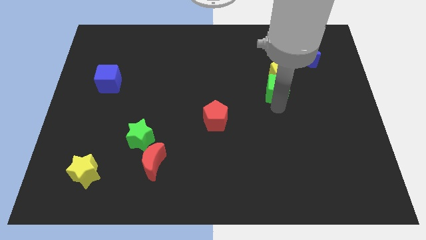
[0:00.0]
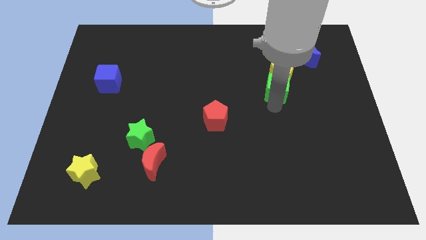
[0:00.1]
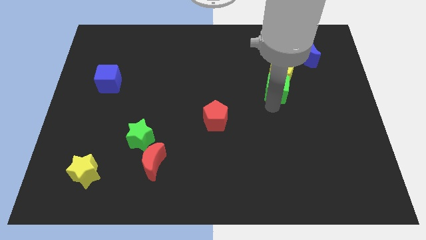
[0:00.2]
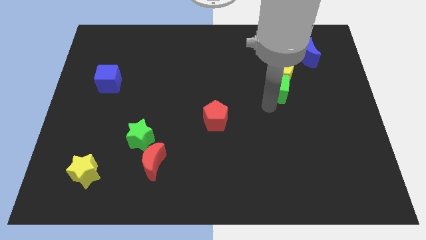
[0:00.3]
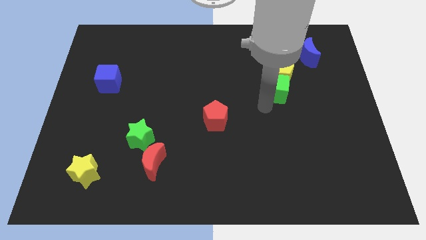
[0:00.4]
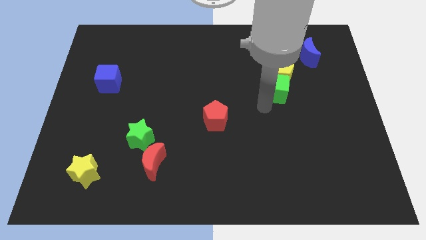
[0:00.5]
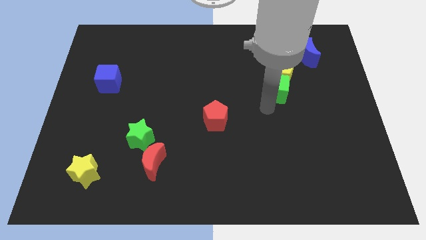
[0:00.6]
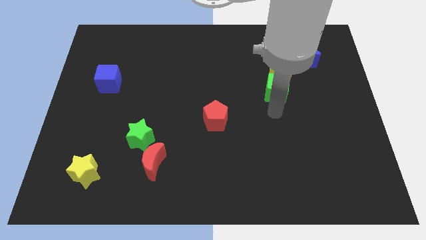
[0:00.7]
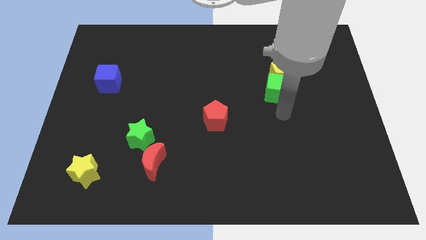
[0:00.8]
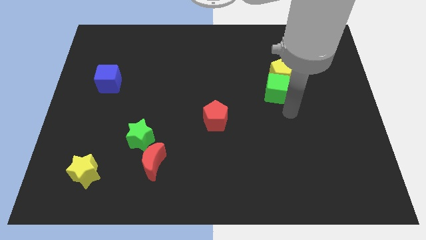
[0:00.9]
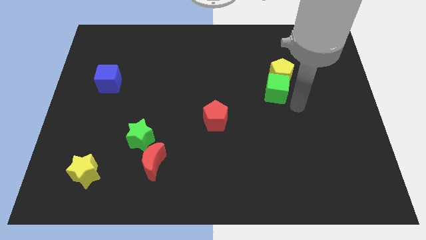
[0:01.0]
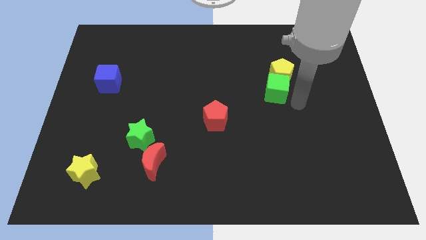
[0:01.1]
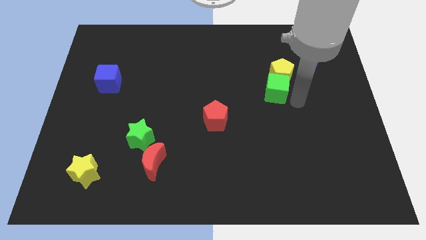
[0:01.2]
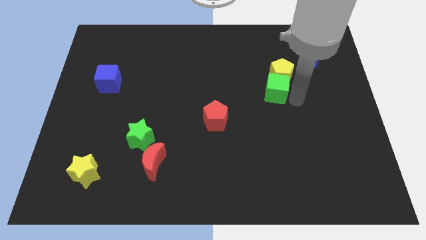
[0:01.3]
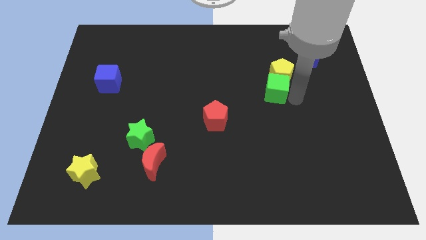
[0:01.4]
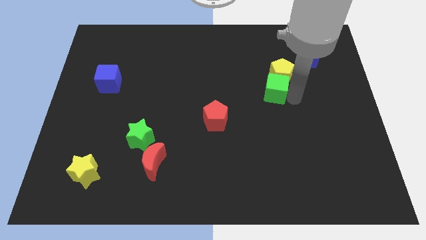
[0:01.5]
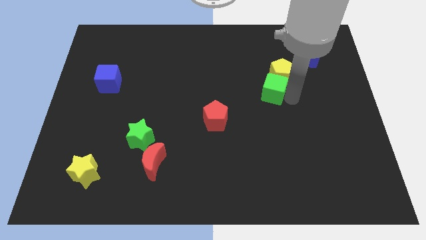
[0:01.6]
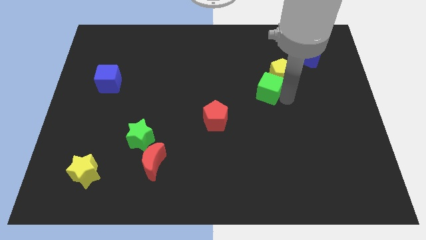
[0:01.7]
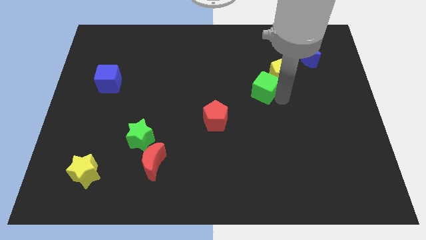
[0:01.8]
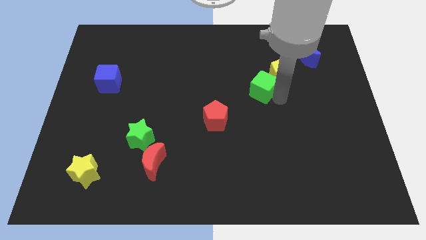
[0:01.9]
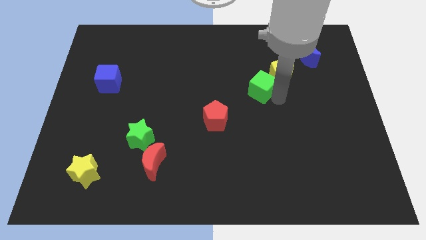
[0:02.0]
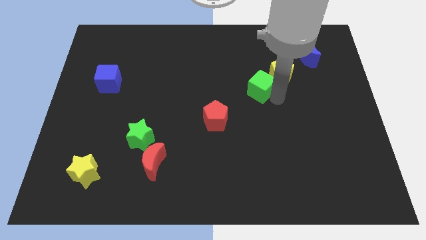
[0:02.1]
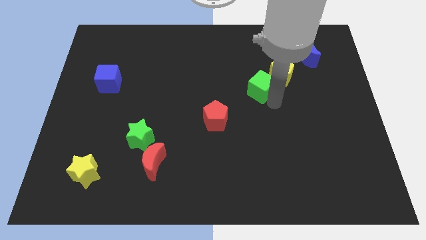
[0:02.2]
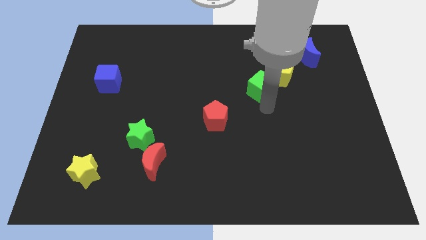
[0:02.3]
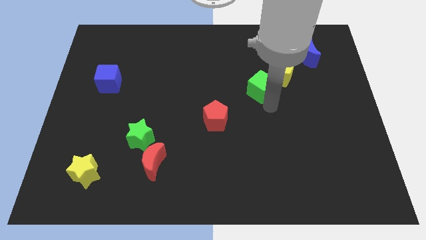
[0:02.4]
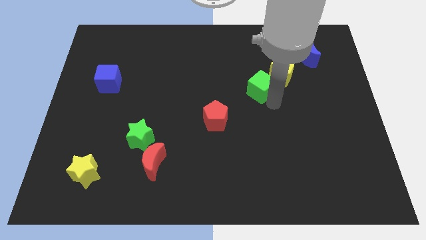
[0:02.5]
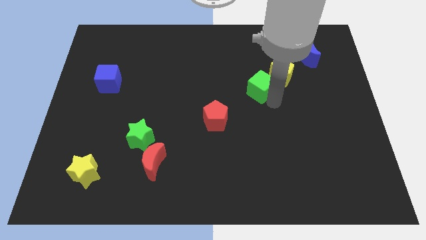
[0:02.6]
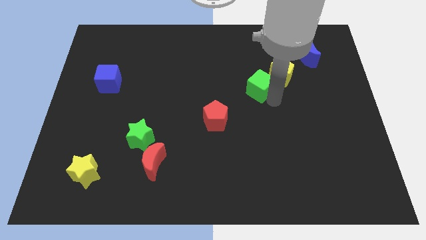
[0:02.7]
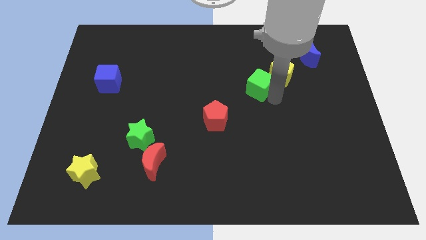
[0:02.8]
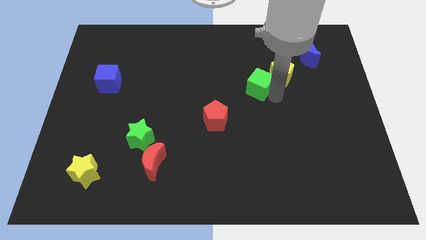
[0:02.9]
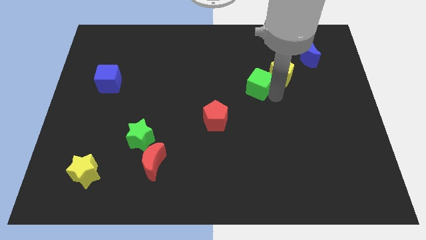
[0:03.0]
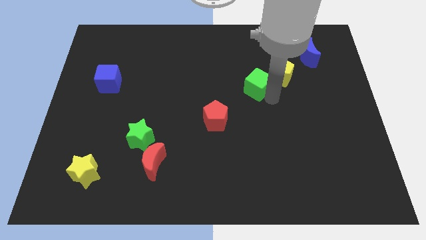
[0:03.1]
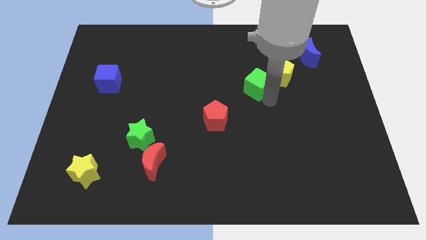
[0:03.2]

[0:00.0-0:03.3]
push the green cube to the left

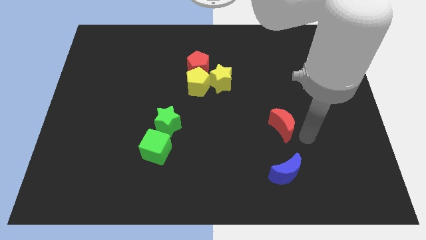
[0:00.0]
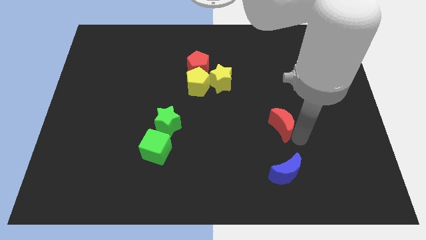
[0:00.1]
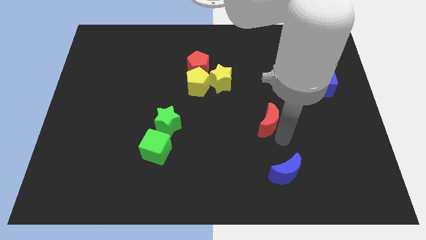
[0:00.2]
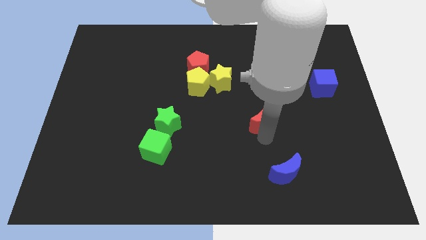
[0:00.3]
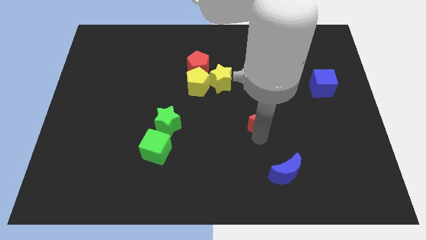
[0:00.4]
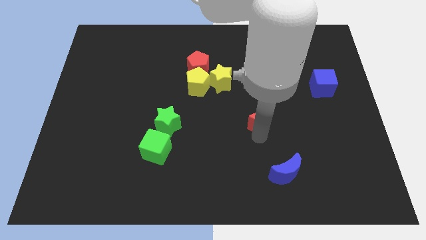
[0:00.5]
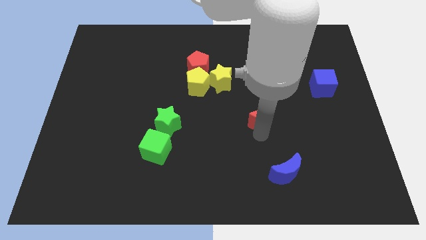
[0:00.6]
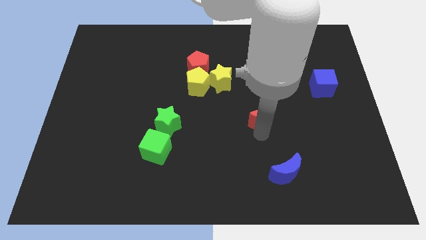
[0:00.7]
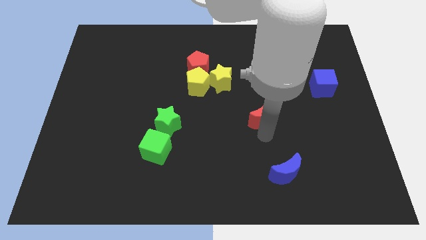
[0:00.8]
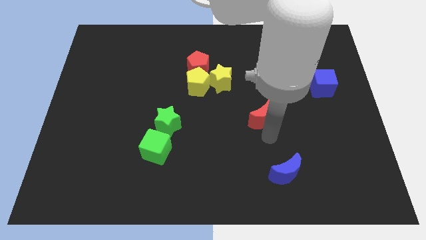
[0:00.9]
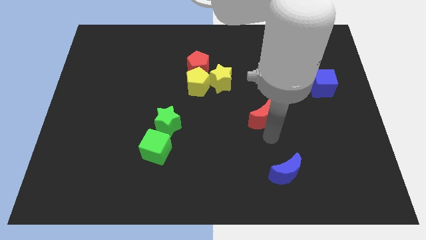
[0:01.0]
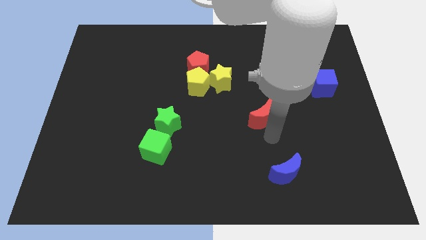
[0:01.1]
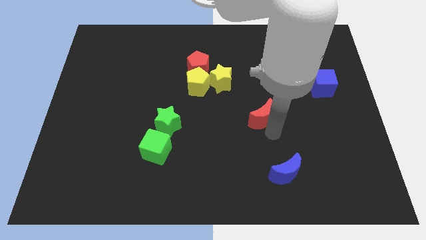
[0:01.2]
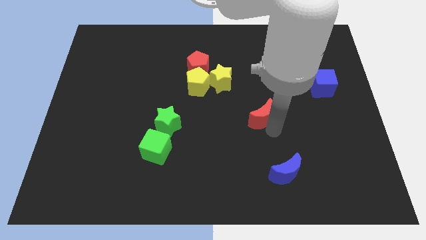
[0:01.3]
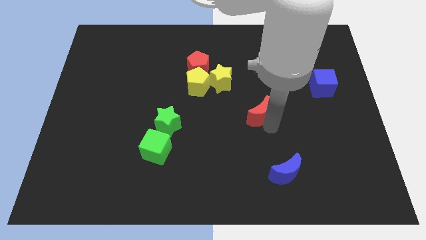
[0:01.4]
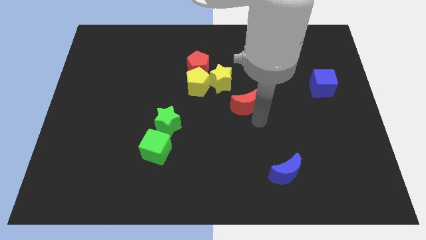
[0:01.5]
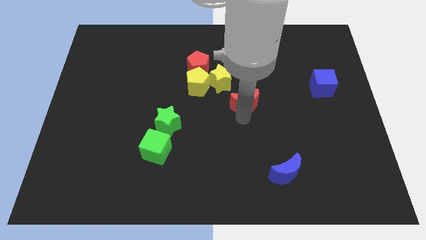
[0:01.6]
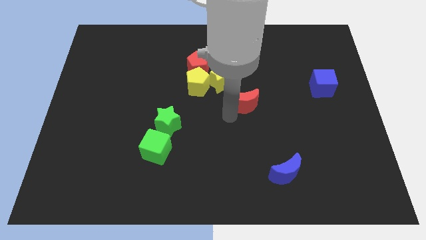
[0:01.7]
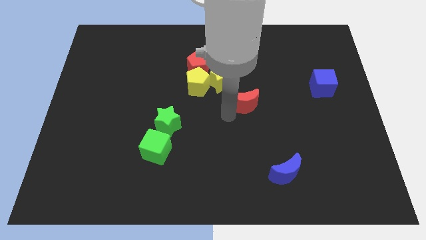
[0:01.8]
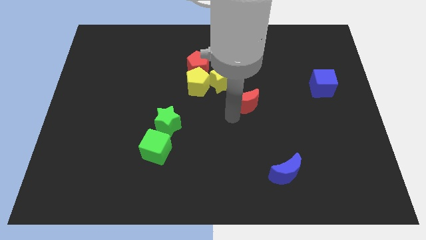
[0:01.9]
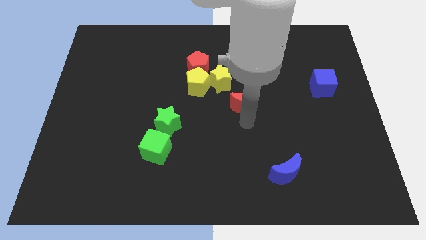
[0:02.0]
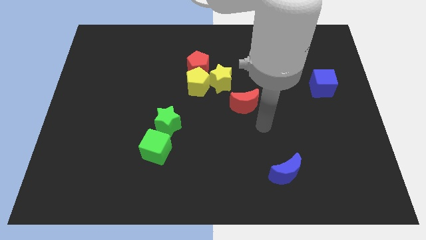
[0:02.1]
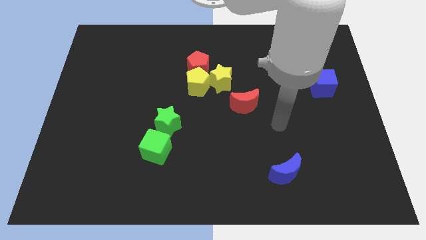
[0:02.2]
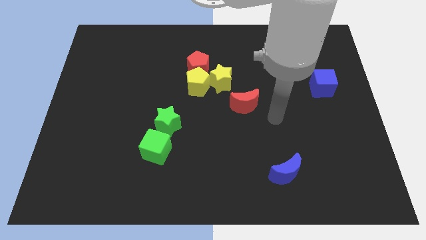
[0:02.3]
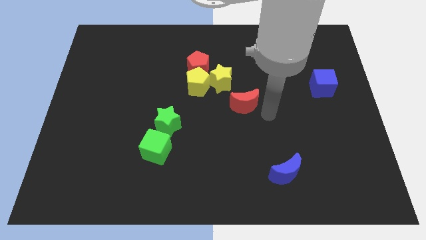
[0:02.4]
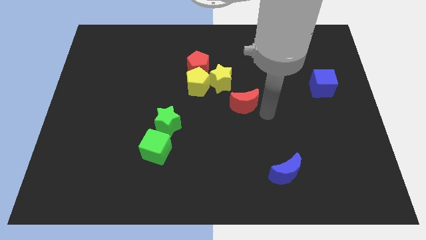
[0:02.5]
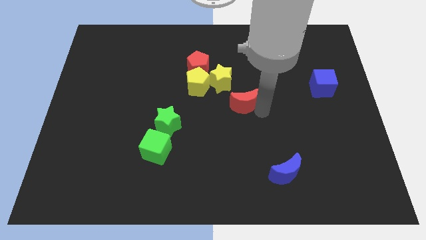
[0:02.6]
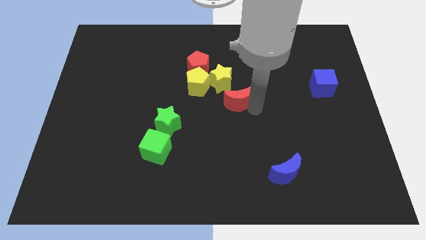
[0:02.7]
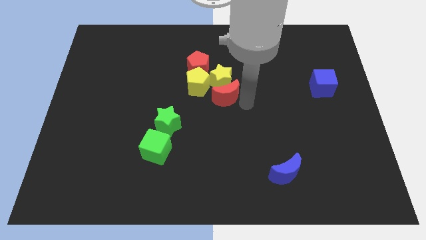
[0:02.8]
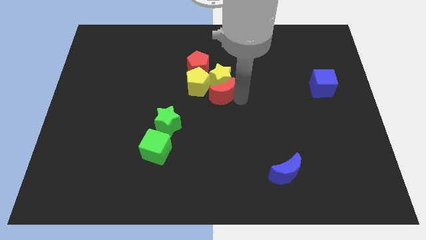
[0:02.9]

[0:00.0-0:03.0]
move the red moon down to the yellow star

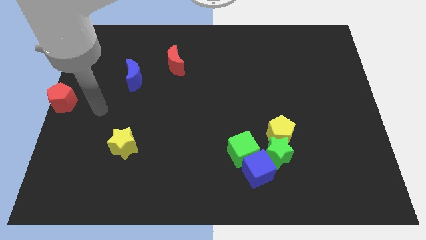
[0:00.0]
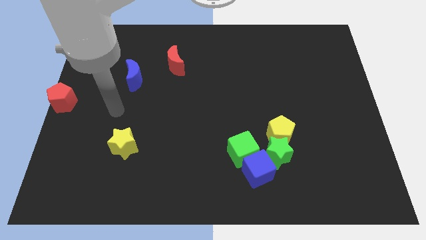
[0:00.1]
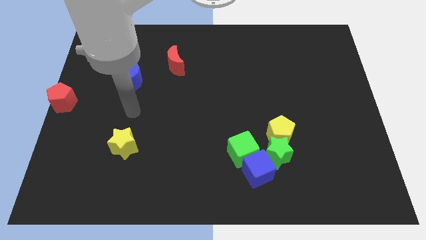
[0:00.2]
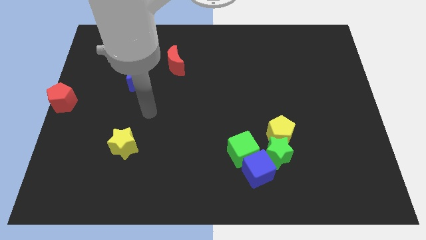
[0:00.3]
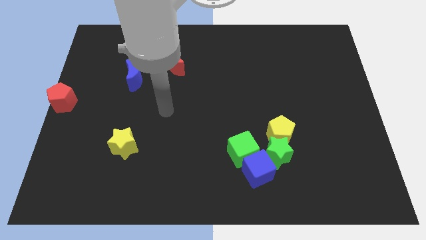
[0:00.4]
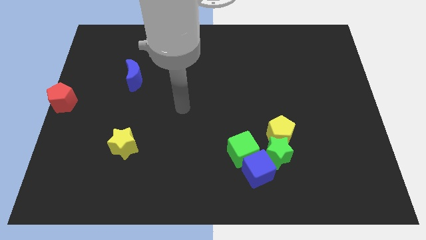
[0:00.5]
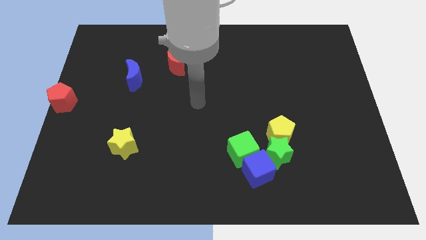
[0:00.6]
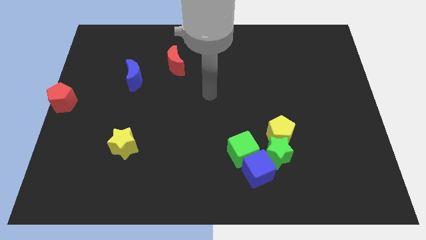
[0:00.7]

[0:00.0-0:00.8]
place your hand at center of the board

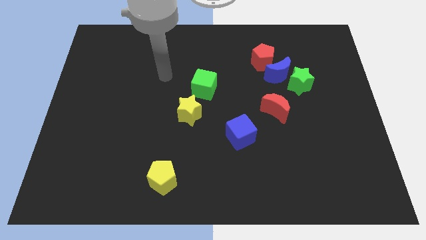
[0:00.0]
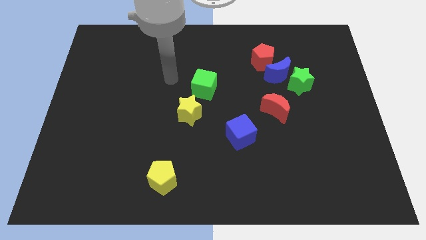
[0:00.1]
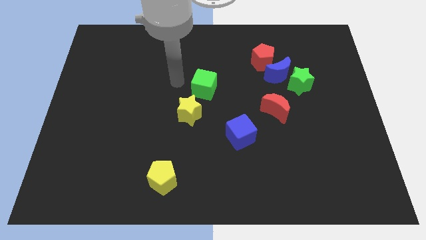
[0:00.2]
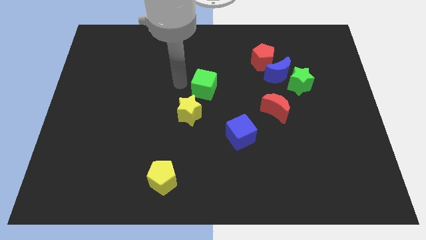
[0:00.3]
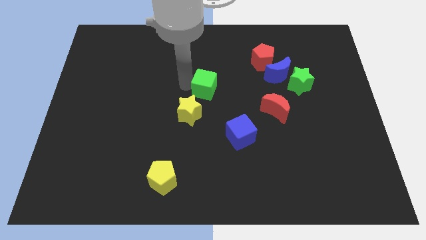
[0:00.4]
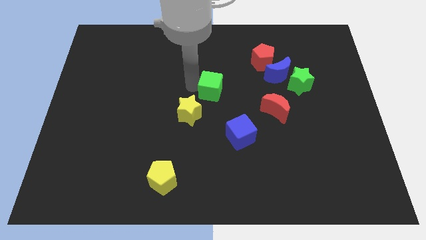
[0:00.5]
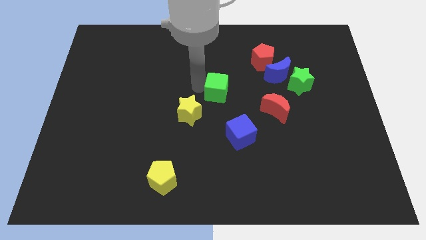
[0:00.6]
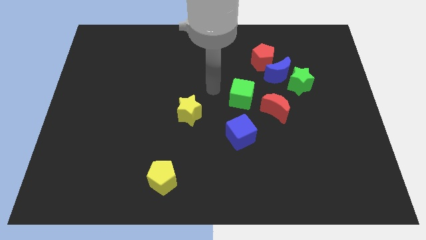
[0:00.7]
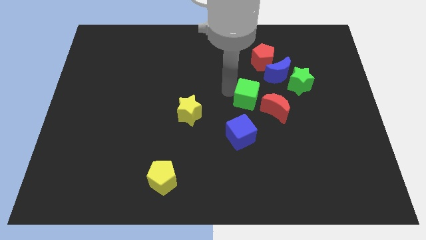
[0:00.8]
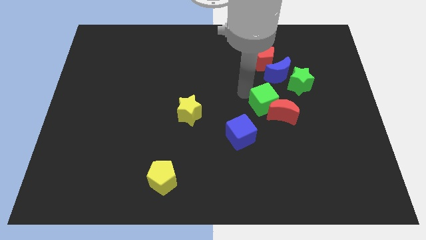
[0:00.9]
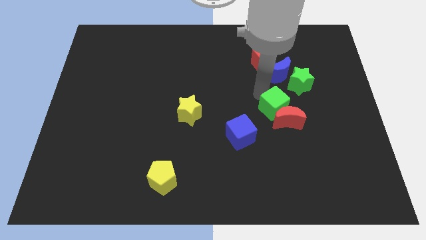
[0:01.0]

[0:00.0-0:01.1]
slide green cube into red moon

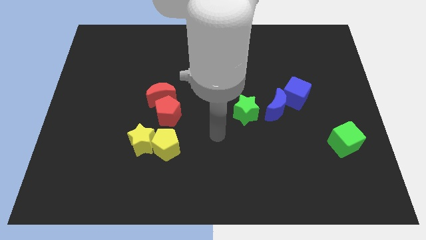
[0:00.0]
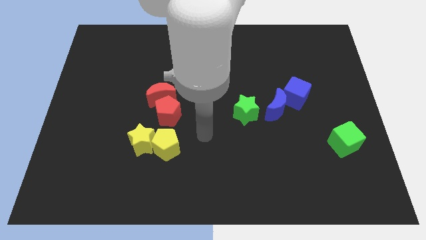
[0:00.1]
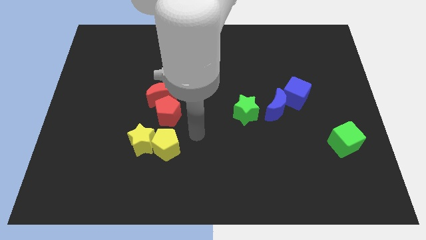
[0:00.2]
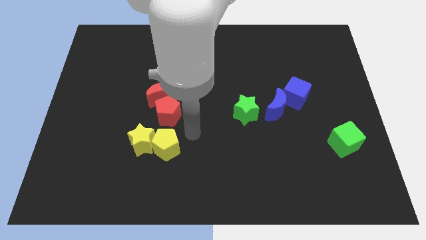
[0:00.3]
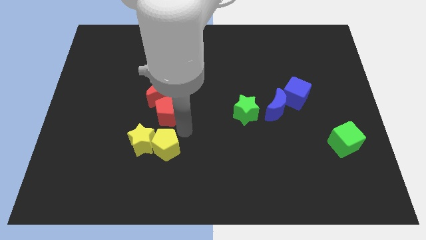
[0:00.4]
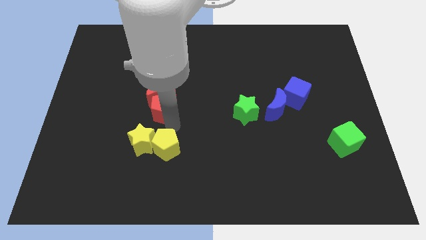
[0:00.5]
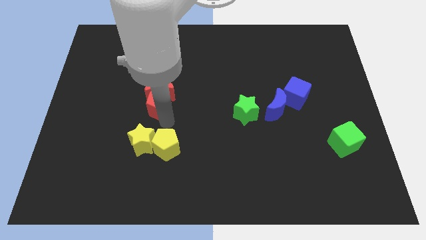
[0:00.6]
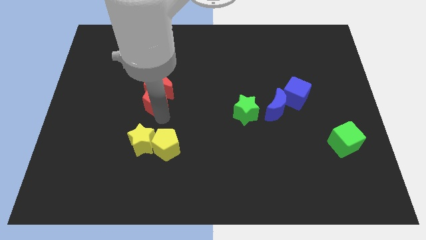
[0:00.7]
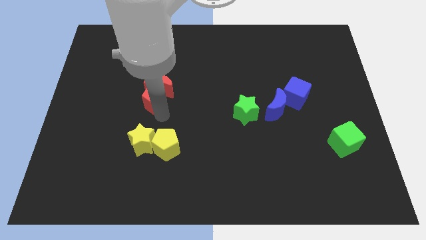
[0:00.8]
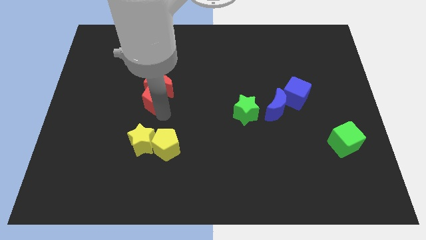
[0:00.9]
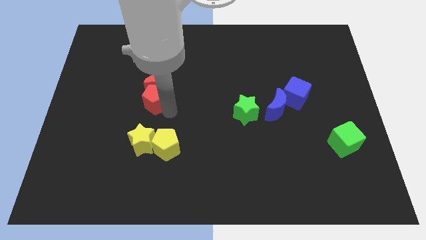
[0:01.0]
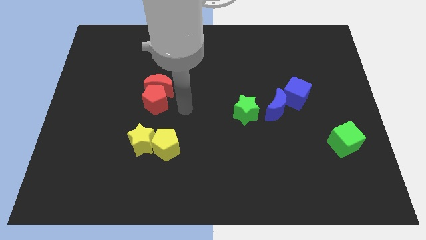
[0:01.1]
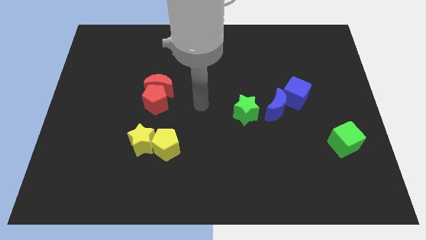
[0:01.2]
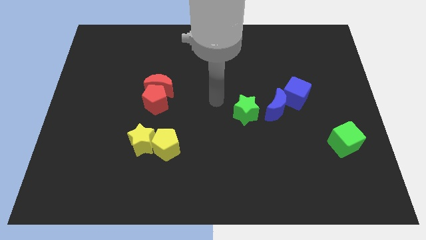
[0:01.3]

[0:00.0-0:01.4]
push the red pentagon into the red crescent
